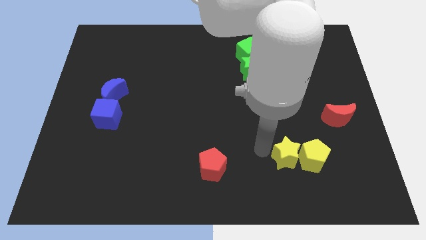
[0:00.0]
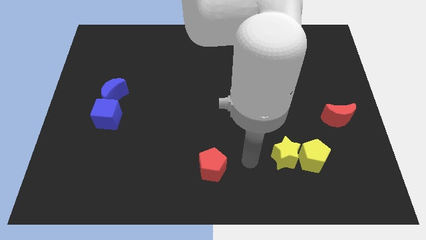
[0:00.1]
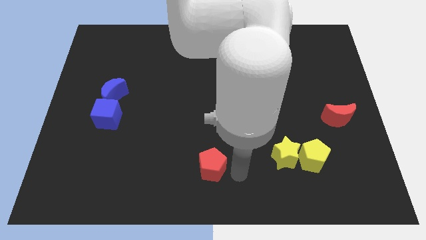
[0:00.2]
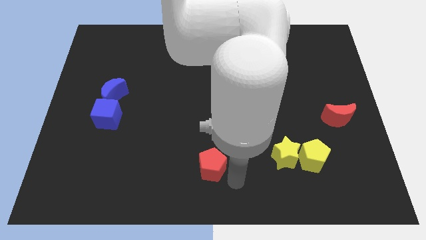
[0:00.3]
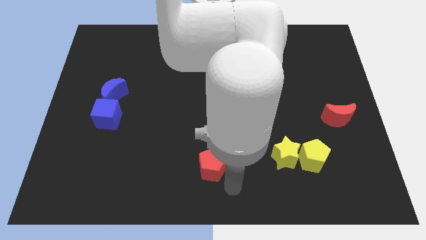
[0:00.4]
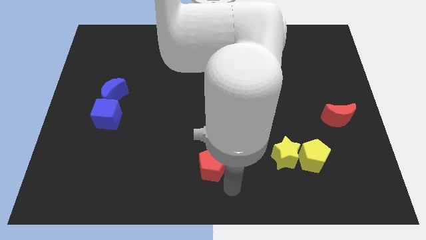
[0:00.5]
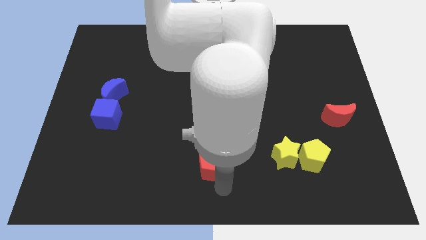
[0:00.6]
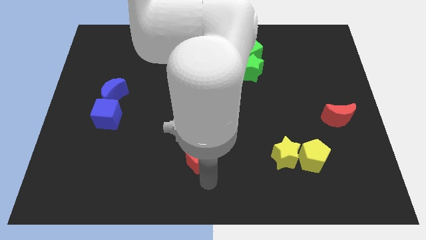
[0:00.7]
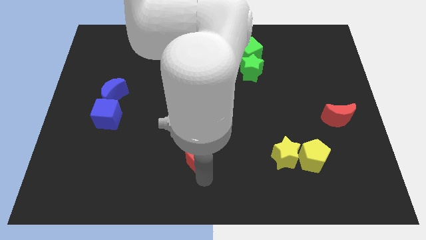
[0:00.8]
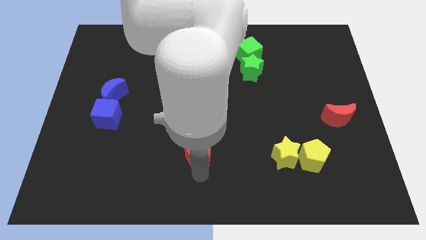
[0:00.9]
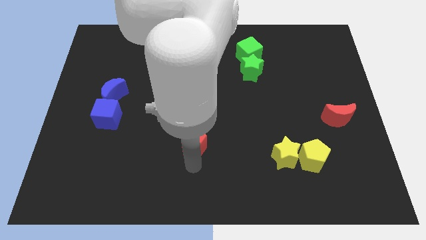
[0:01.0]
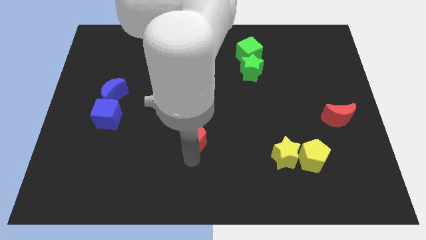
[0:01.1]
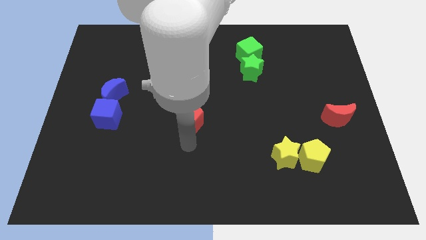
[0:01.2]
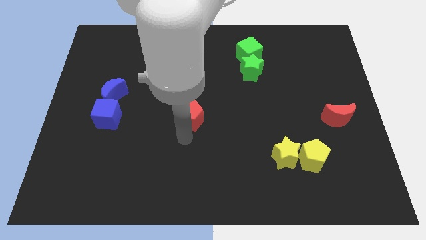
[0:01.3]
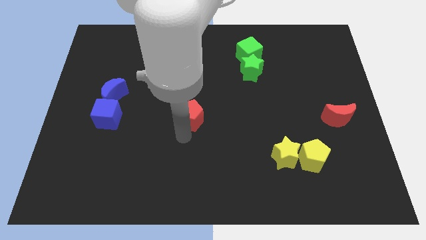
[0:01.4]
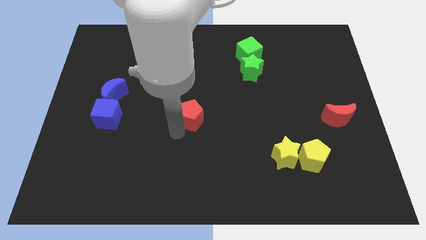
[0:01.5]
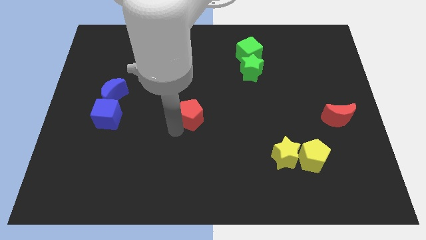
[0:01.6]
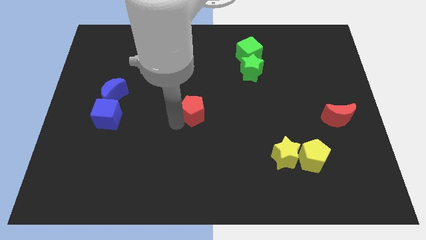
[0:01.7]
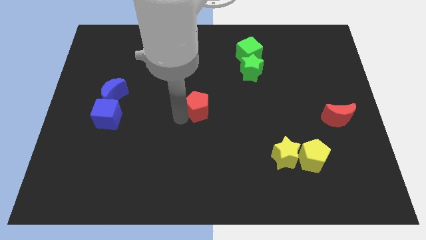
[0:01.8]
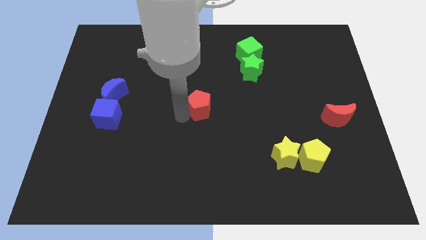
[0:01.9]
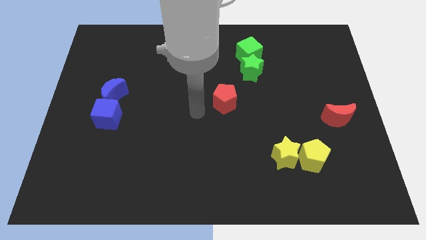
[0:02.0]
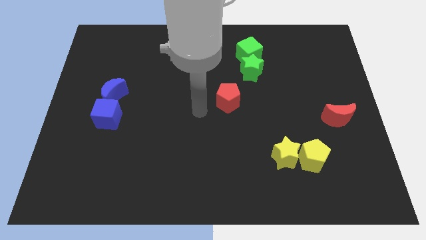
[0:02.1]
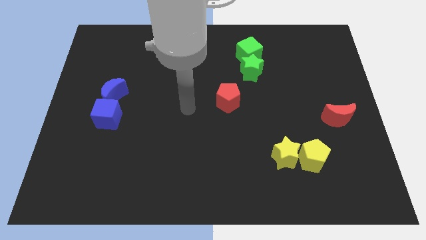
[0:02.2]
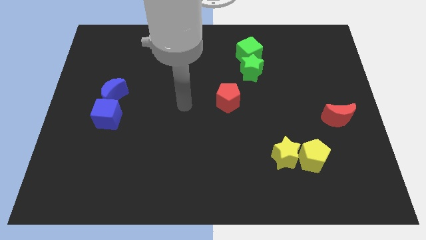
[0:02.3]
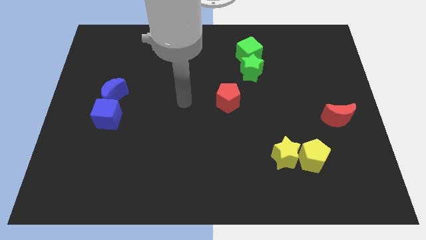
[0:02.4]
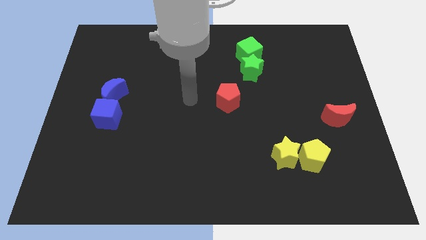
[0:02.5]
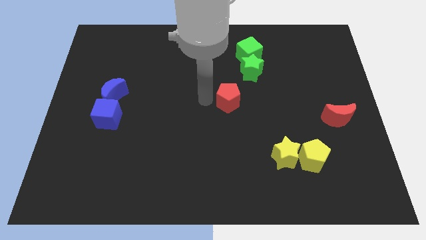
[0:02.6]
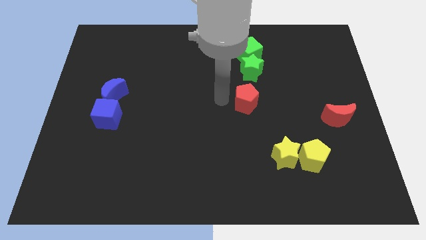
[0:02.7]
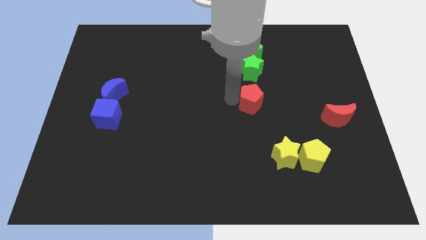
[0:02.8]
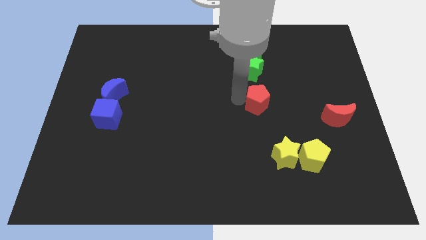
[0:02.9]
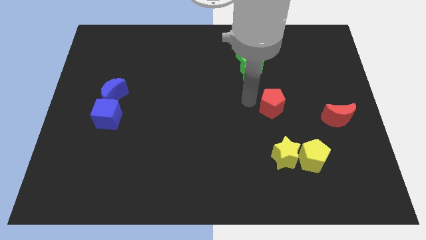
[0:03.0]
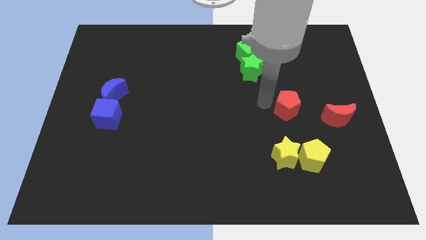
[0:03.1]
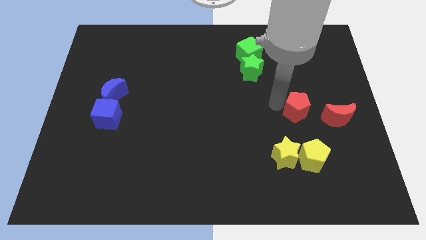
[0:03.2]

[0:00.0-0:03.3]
push the red pentagon to the top of the yellow star

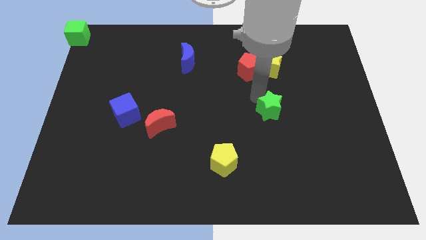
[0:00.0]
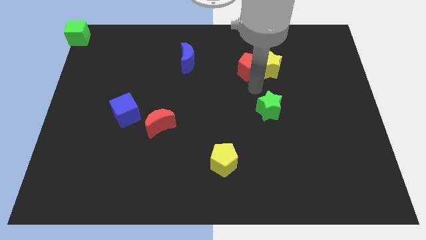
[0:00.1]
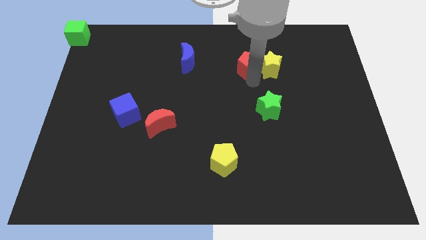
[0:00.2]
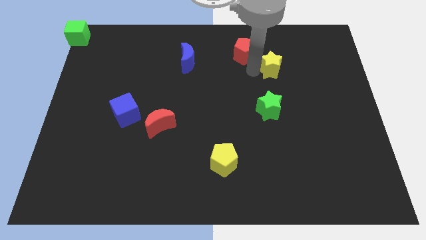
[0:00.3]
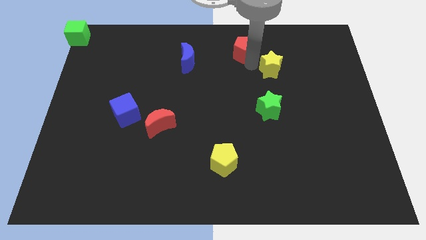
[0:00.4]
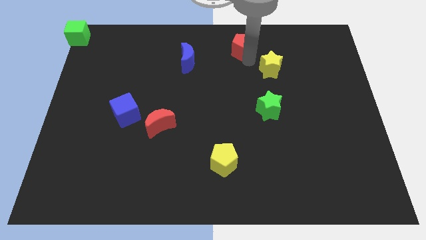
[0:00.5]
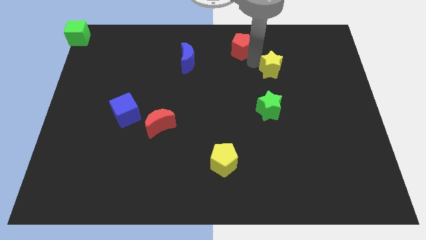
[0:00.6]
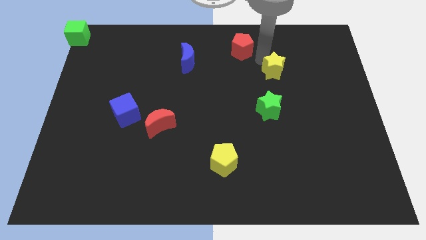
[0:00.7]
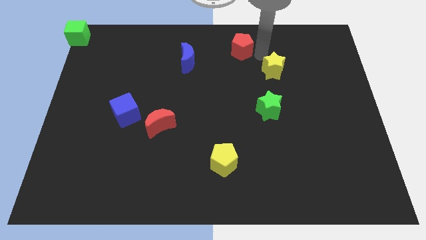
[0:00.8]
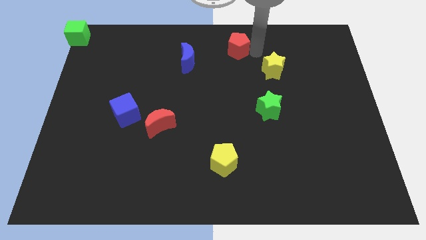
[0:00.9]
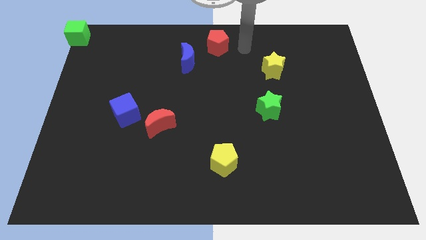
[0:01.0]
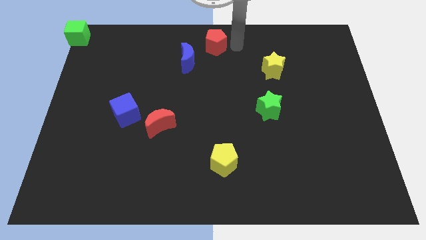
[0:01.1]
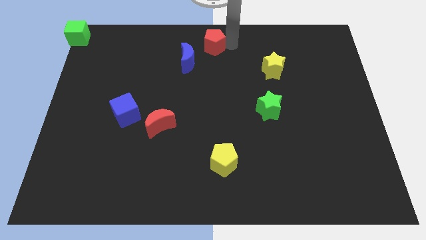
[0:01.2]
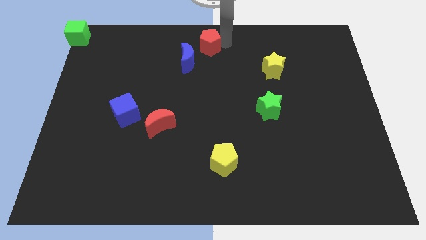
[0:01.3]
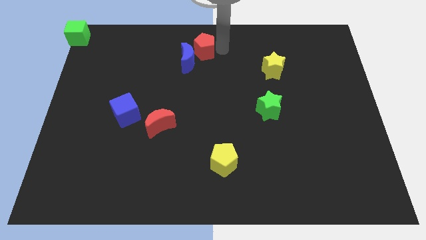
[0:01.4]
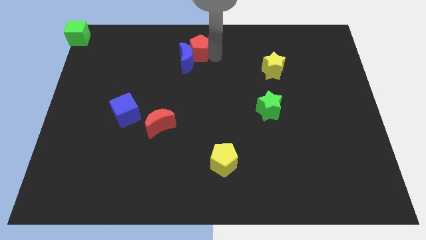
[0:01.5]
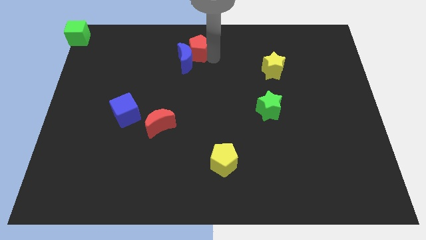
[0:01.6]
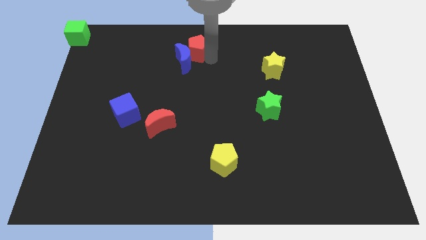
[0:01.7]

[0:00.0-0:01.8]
separate red pentagon and yellow star

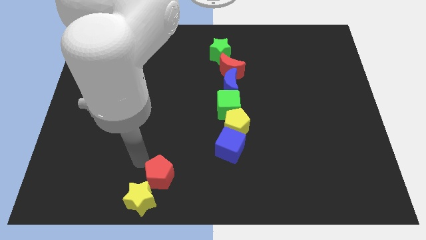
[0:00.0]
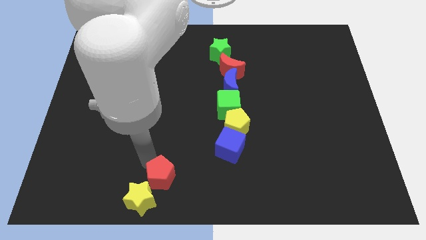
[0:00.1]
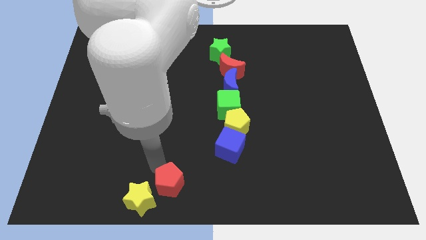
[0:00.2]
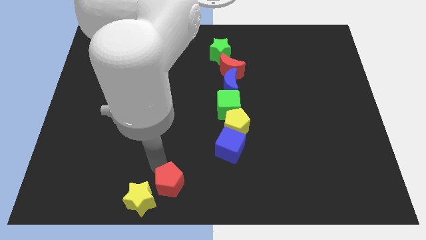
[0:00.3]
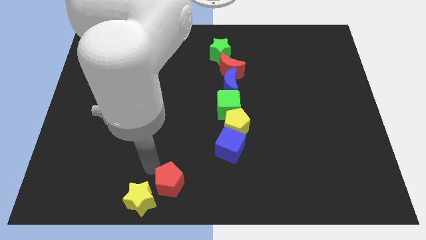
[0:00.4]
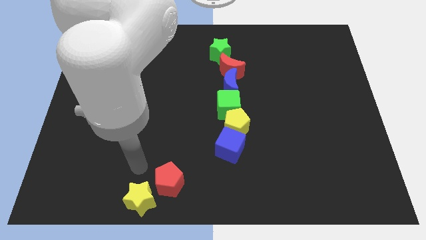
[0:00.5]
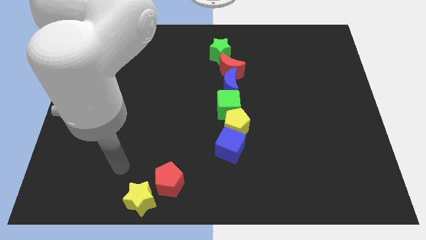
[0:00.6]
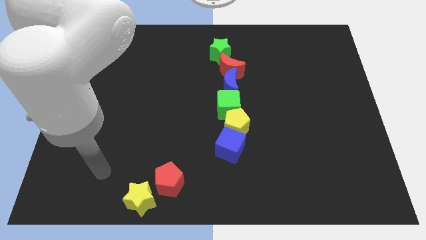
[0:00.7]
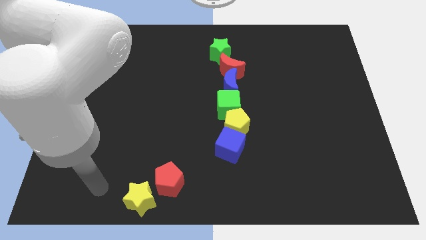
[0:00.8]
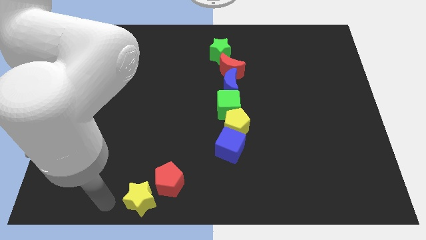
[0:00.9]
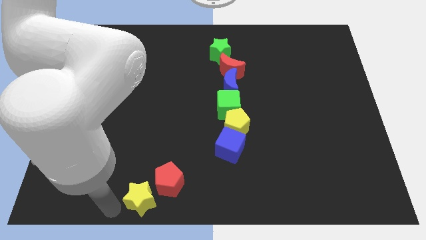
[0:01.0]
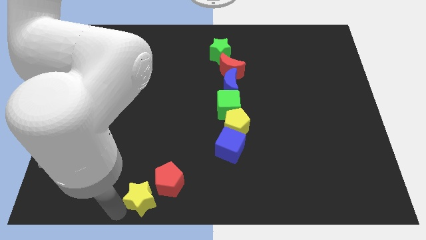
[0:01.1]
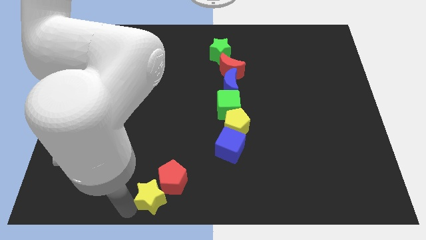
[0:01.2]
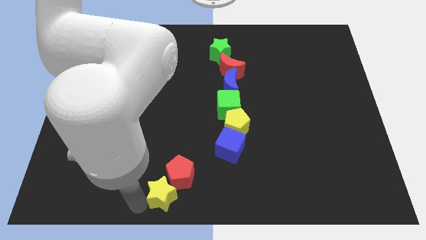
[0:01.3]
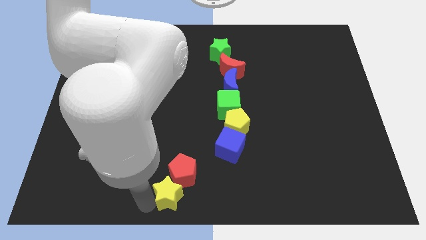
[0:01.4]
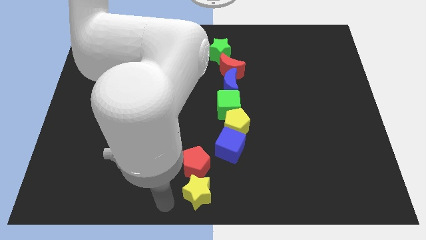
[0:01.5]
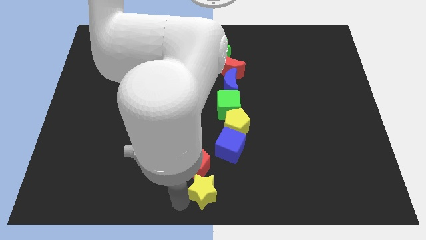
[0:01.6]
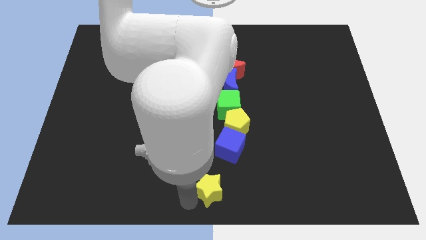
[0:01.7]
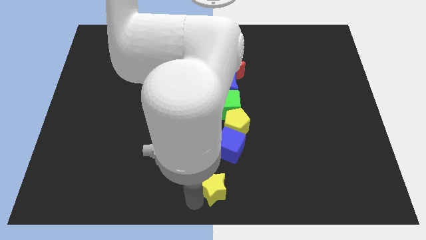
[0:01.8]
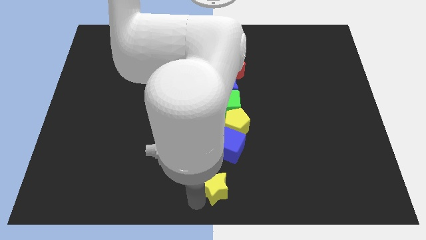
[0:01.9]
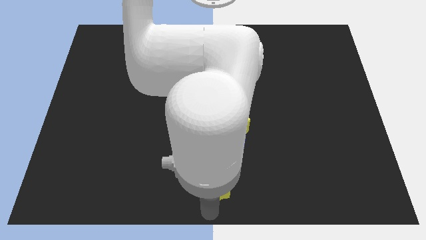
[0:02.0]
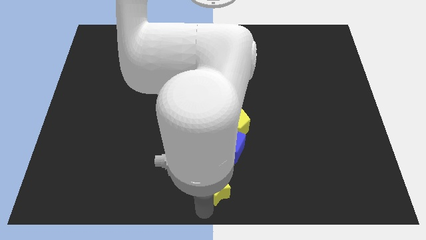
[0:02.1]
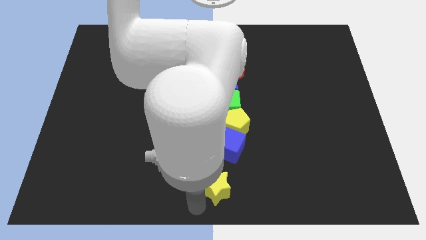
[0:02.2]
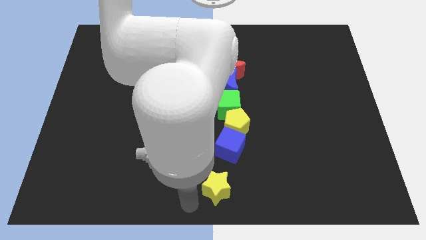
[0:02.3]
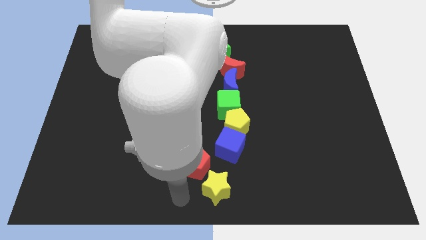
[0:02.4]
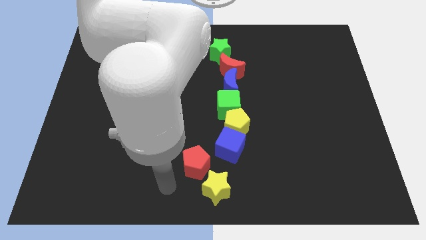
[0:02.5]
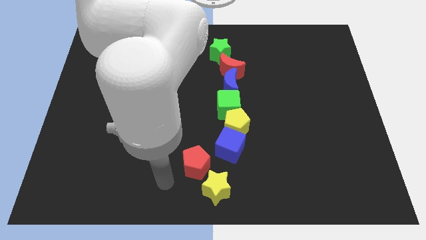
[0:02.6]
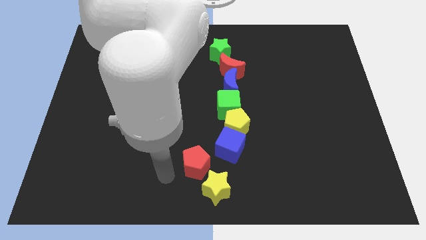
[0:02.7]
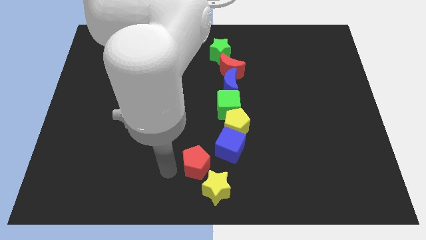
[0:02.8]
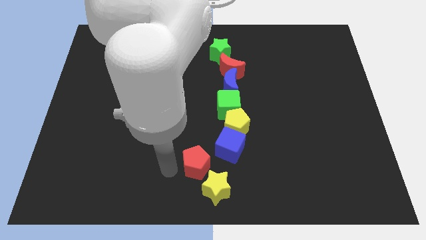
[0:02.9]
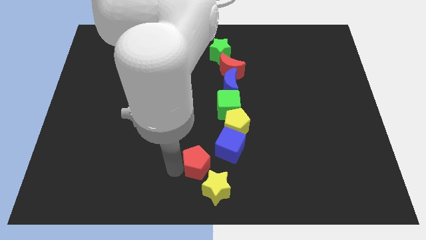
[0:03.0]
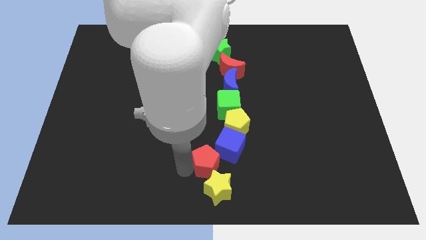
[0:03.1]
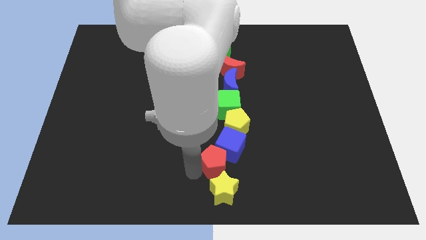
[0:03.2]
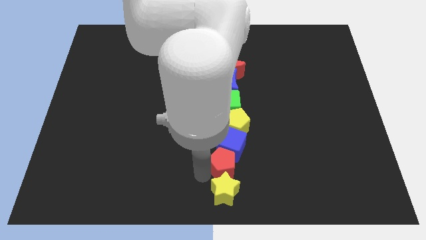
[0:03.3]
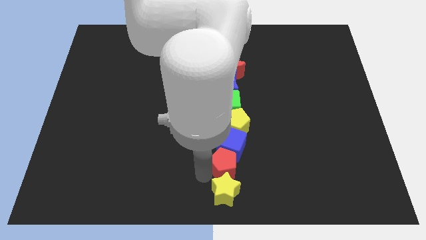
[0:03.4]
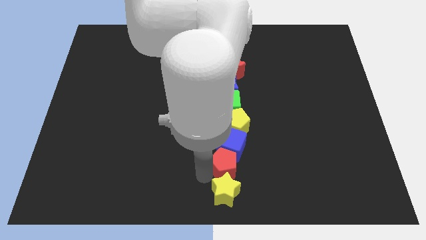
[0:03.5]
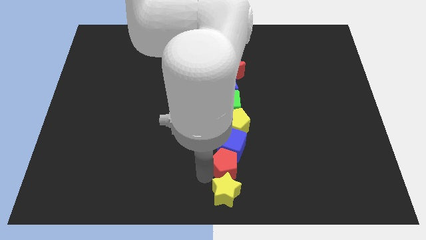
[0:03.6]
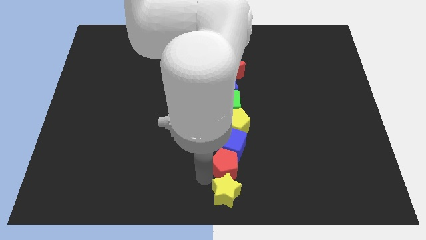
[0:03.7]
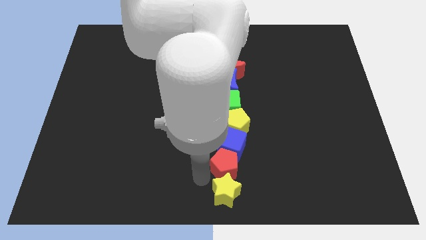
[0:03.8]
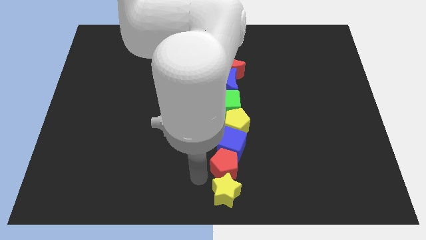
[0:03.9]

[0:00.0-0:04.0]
push the red pentagon yellow star to the bottom of blue cube
